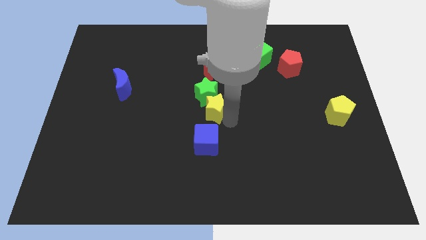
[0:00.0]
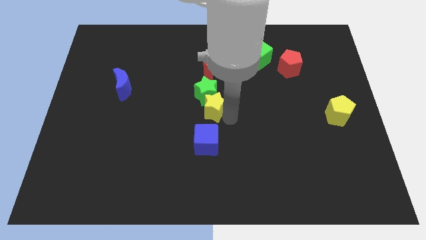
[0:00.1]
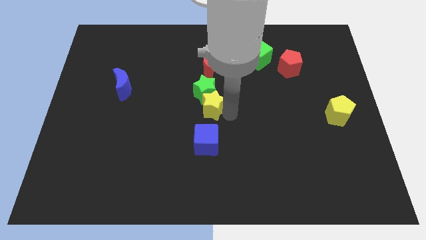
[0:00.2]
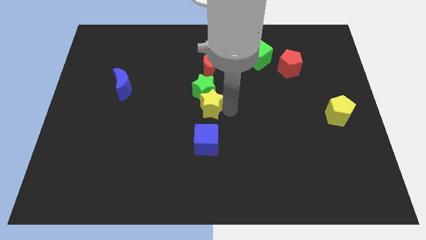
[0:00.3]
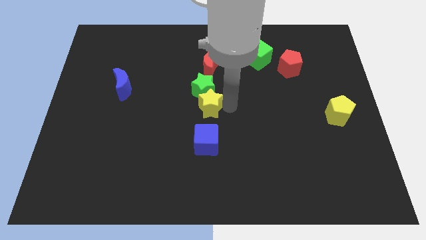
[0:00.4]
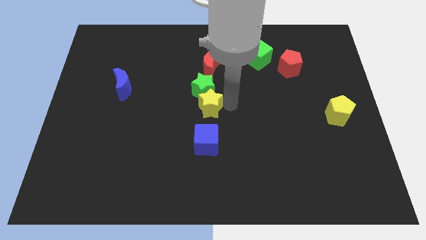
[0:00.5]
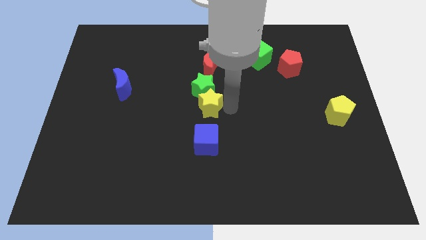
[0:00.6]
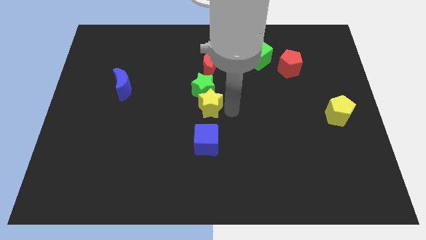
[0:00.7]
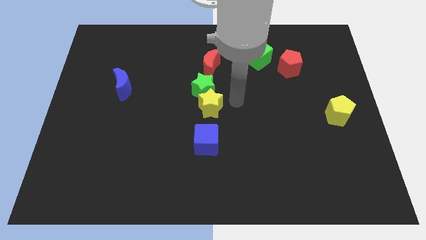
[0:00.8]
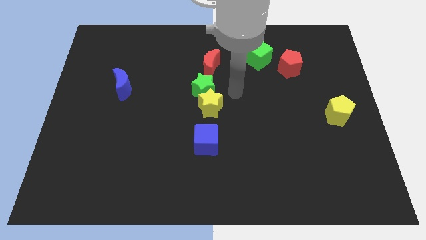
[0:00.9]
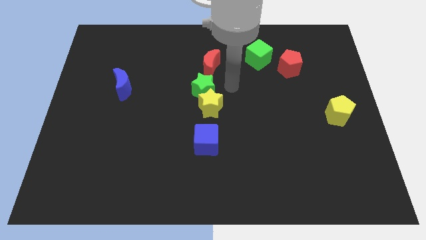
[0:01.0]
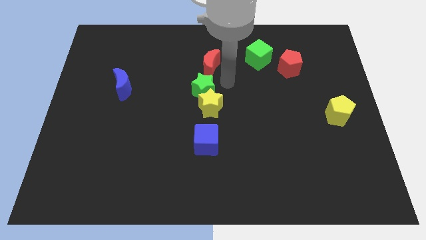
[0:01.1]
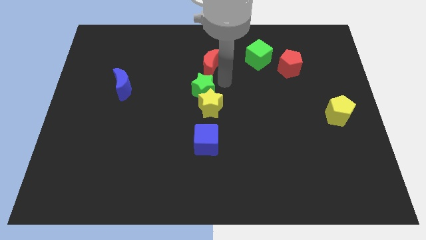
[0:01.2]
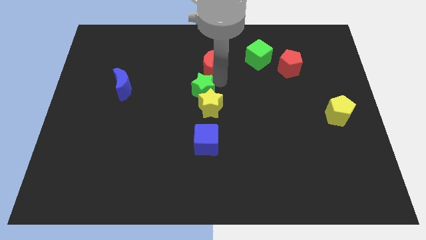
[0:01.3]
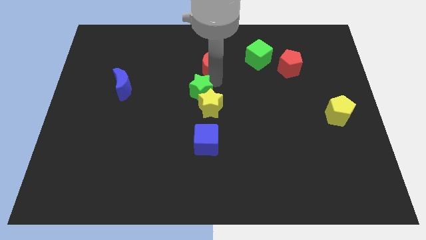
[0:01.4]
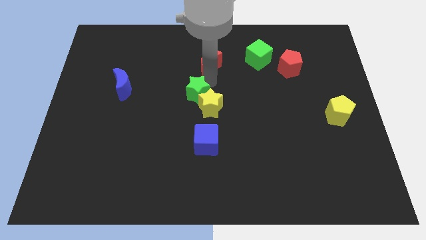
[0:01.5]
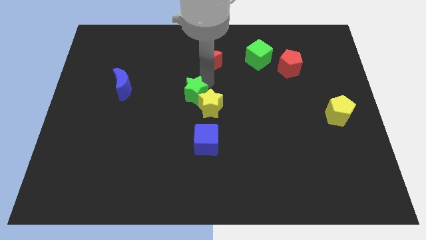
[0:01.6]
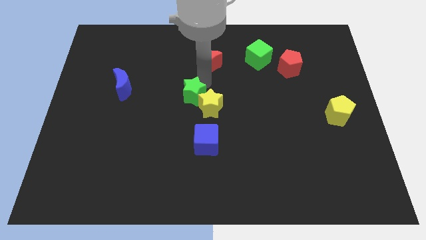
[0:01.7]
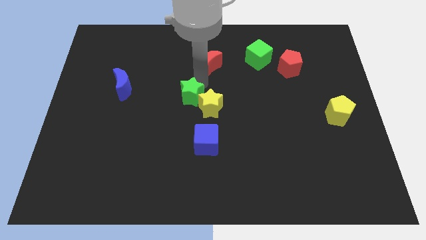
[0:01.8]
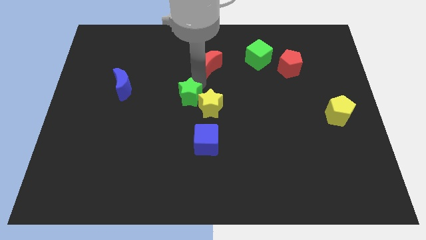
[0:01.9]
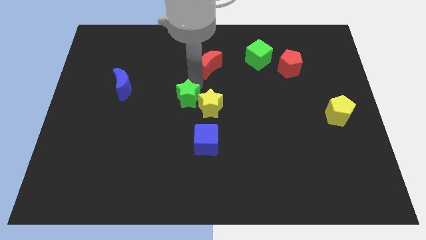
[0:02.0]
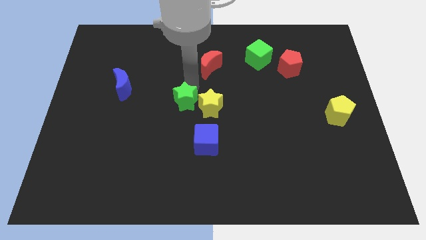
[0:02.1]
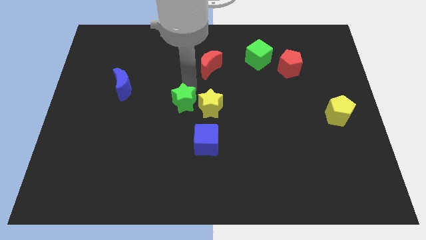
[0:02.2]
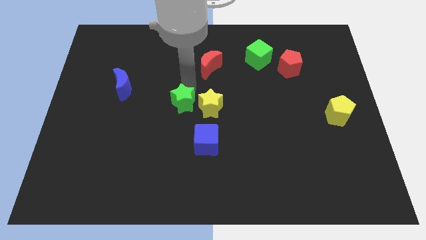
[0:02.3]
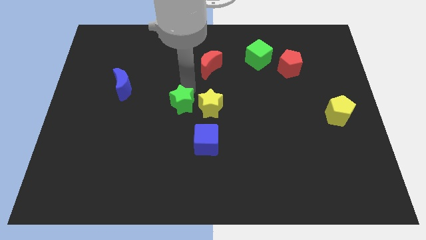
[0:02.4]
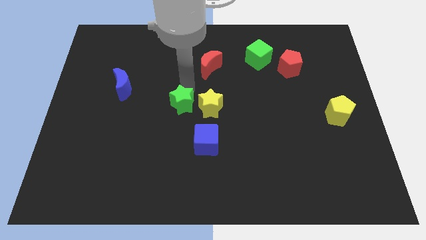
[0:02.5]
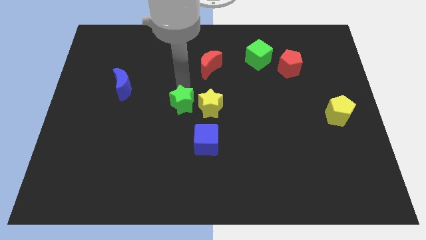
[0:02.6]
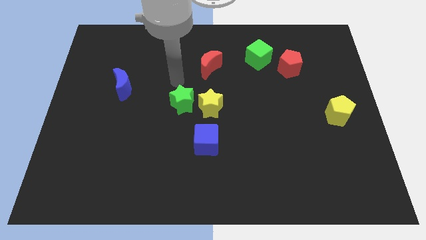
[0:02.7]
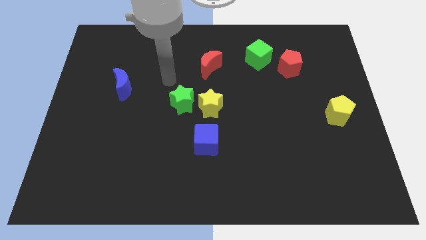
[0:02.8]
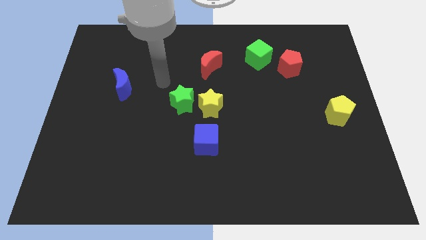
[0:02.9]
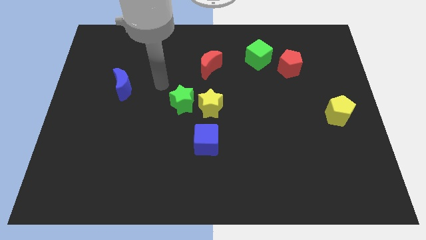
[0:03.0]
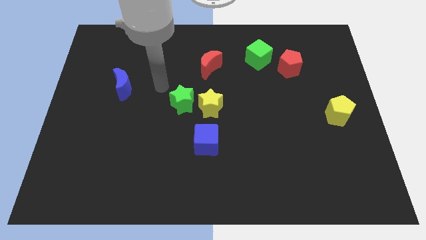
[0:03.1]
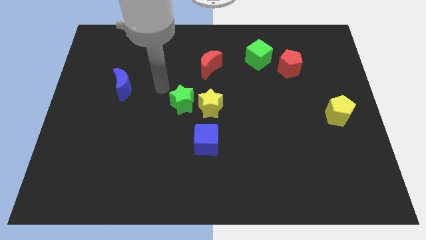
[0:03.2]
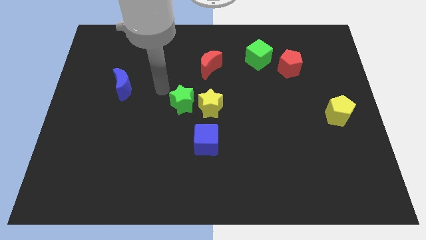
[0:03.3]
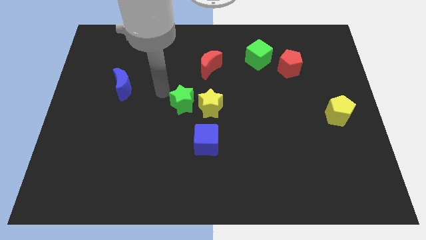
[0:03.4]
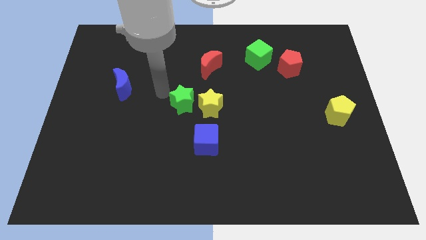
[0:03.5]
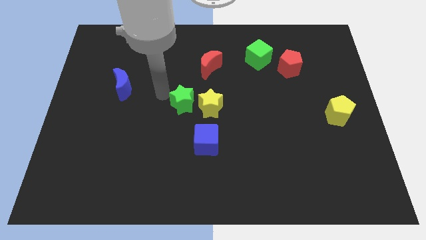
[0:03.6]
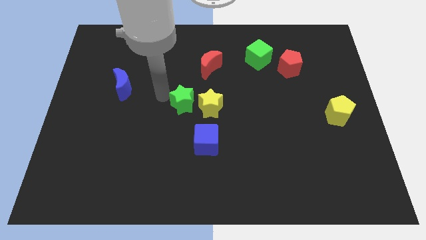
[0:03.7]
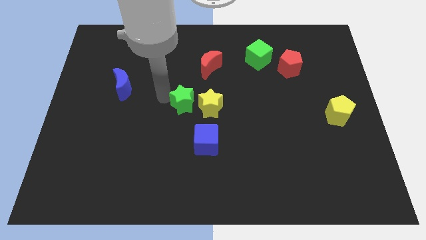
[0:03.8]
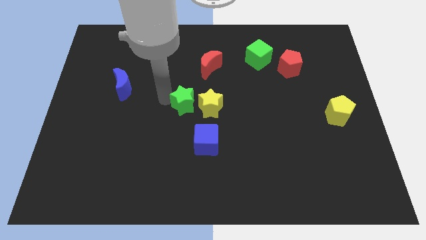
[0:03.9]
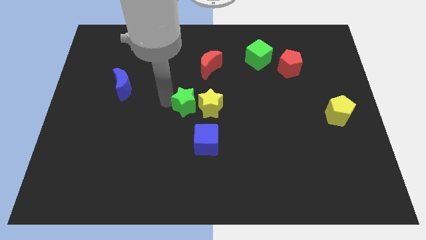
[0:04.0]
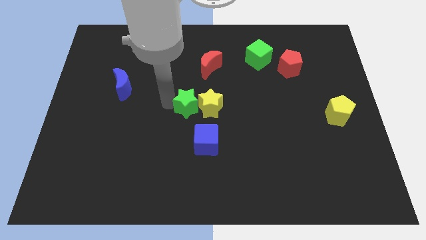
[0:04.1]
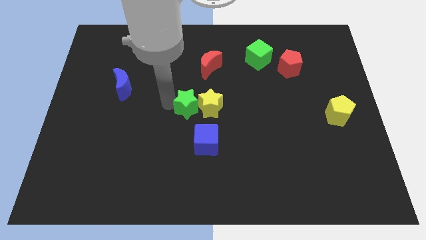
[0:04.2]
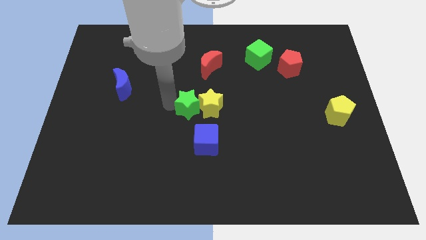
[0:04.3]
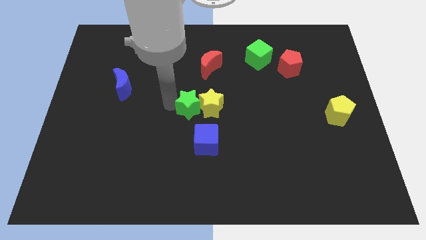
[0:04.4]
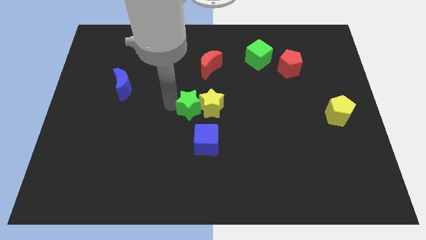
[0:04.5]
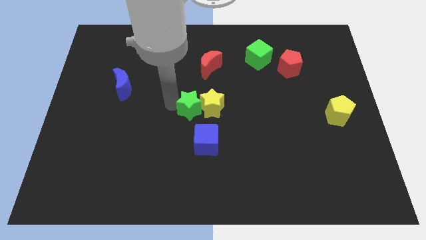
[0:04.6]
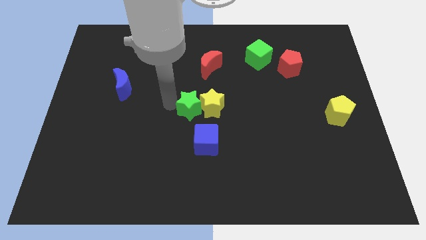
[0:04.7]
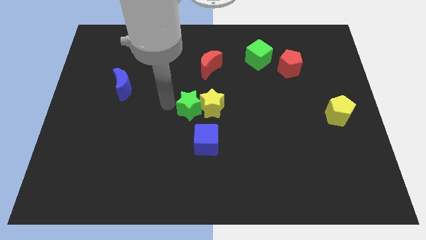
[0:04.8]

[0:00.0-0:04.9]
place both the stars at the center of the board

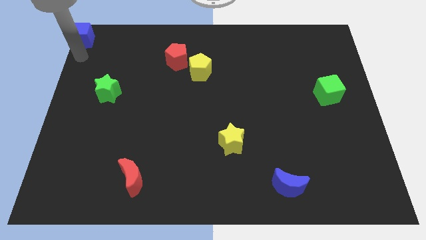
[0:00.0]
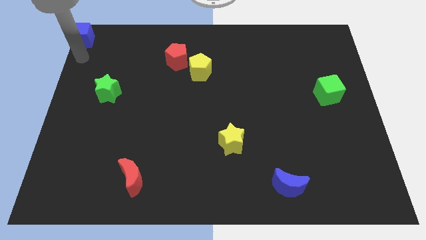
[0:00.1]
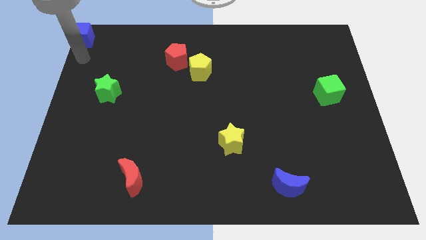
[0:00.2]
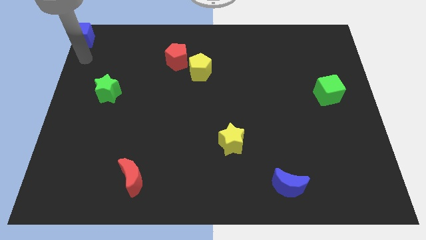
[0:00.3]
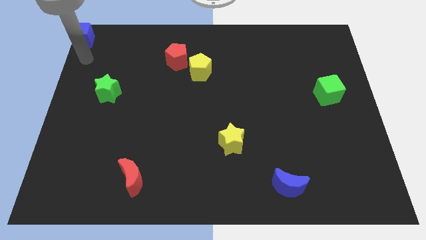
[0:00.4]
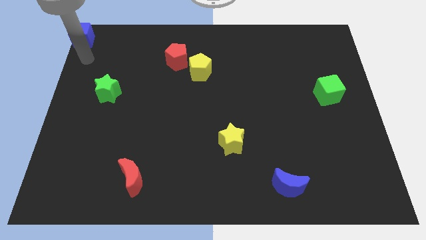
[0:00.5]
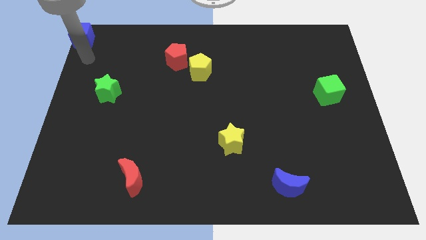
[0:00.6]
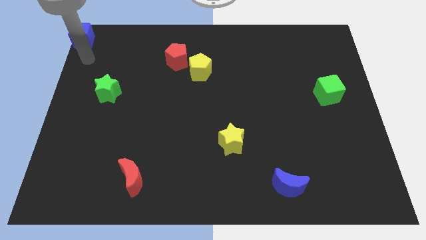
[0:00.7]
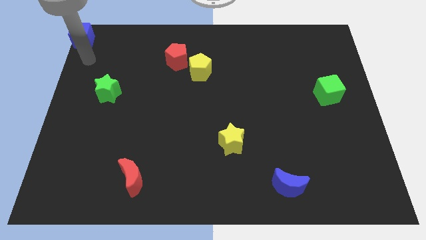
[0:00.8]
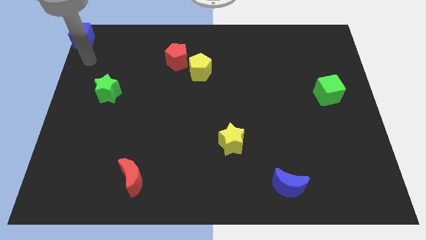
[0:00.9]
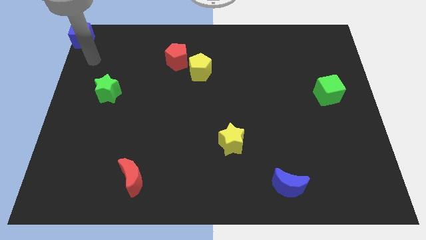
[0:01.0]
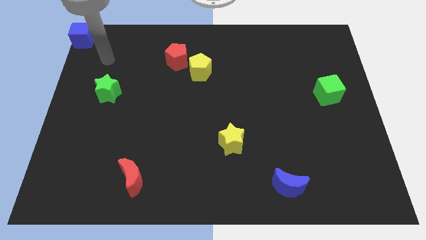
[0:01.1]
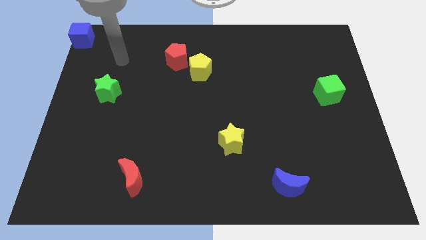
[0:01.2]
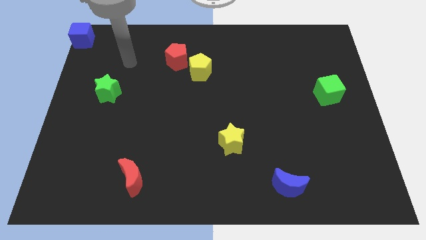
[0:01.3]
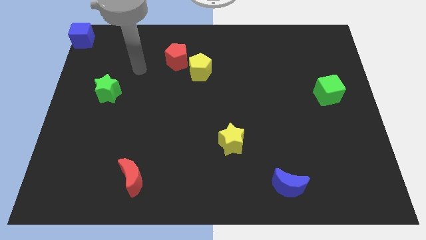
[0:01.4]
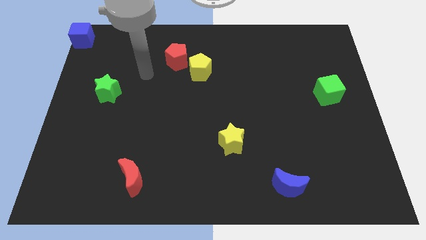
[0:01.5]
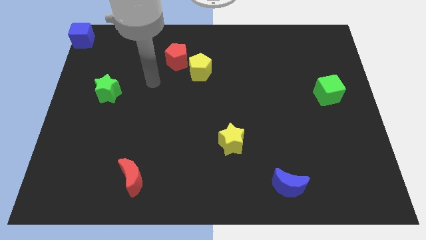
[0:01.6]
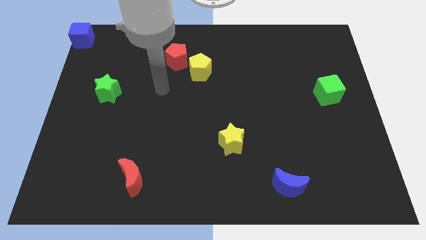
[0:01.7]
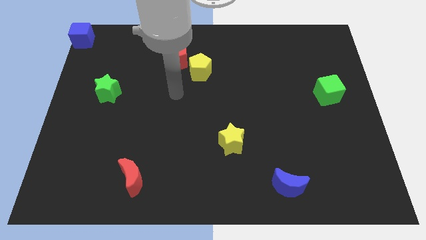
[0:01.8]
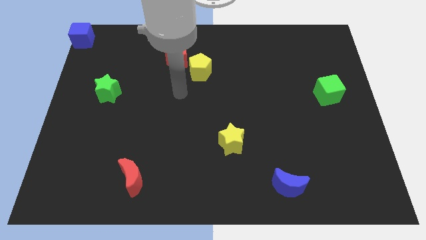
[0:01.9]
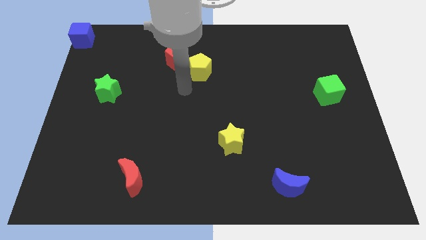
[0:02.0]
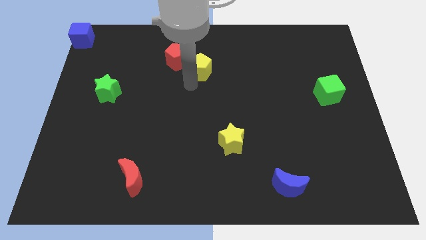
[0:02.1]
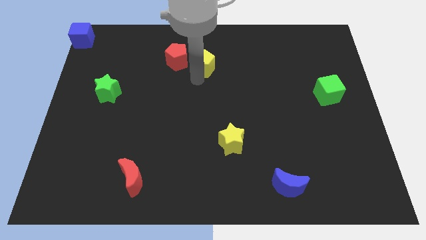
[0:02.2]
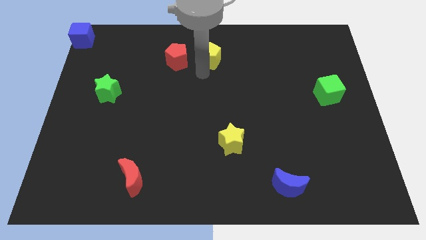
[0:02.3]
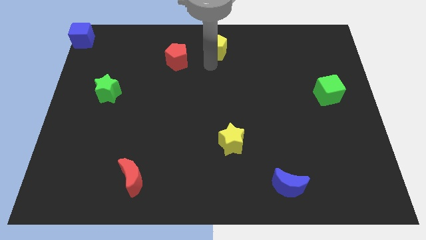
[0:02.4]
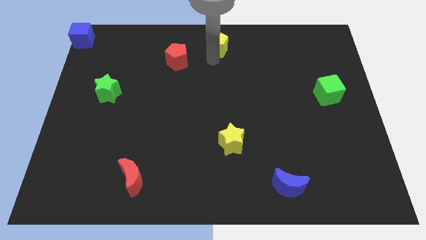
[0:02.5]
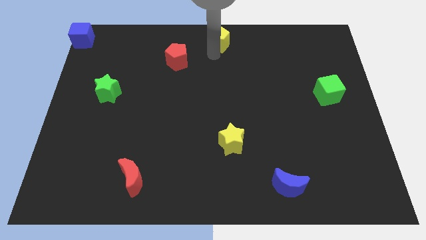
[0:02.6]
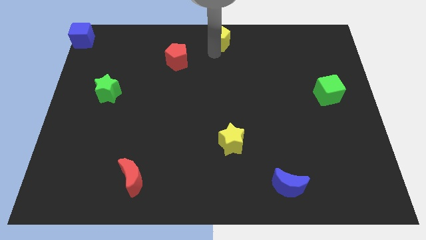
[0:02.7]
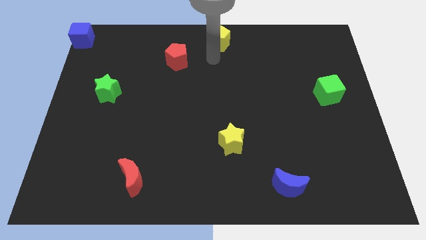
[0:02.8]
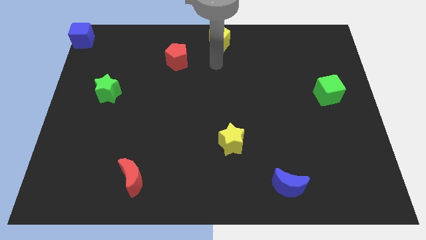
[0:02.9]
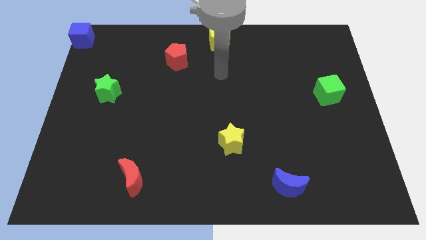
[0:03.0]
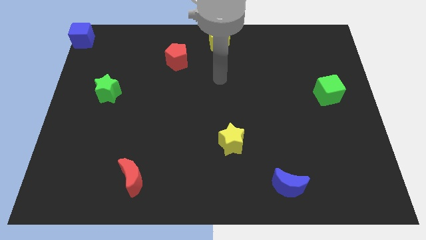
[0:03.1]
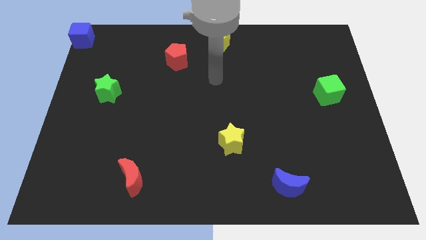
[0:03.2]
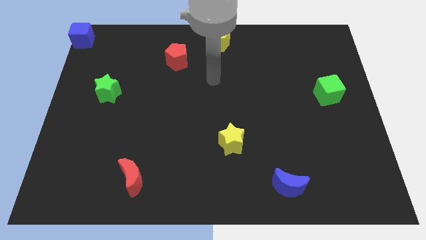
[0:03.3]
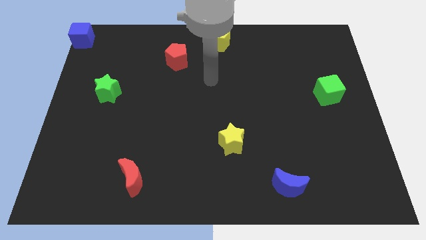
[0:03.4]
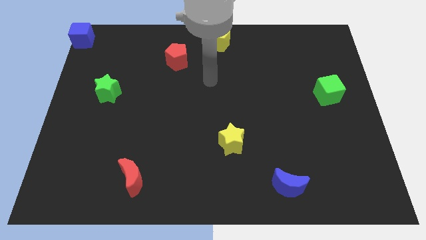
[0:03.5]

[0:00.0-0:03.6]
push the yellow pentagon towards the top center of the board

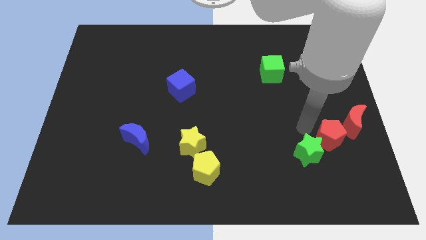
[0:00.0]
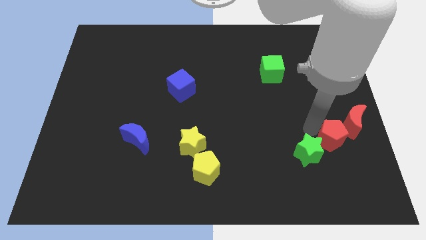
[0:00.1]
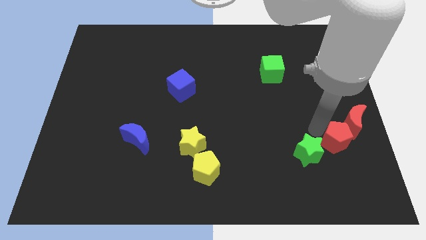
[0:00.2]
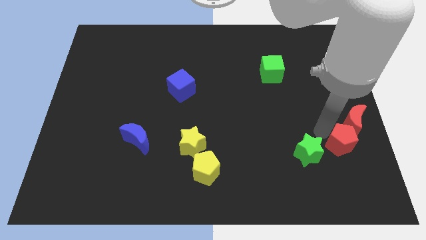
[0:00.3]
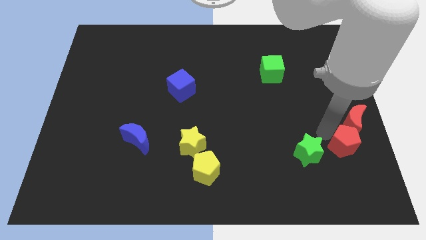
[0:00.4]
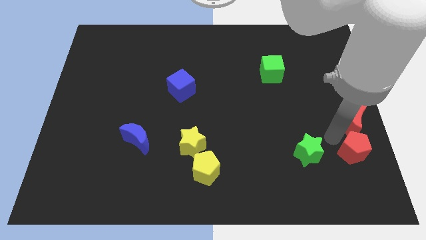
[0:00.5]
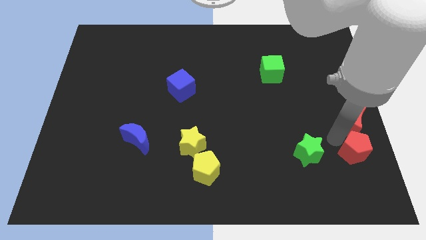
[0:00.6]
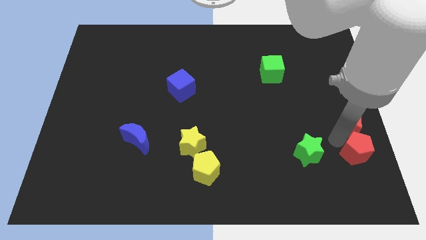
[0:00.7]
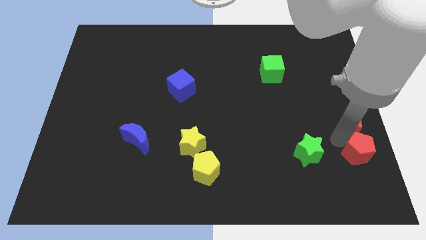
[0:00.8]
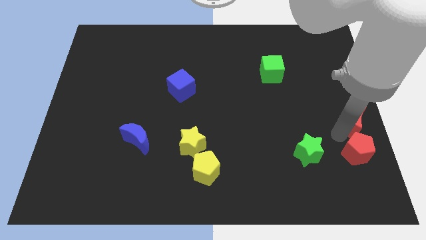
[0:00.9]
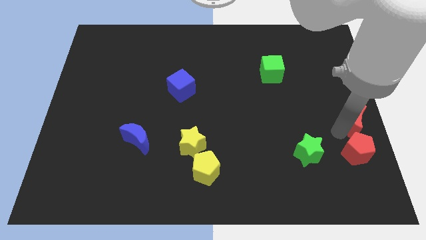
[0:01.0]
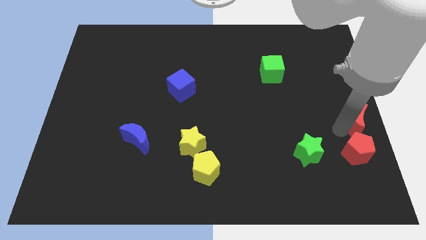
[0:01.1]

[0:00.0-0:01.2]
push the red pentagon down to the red moon
